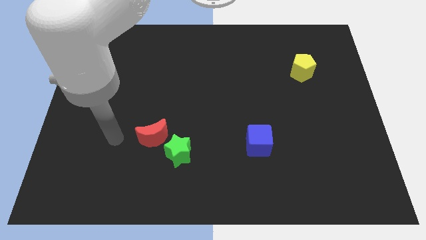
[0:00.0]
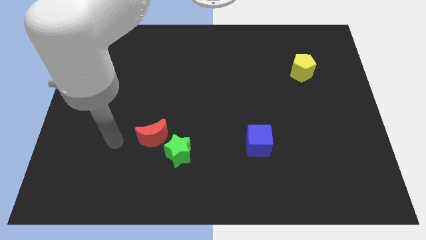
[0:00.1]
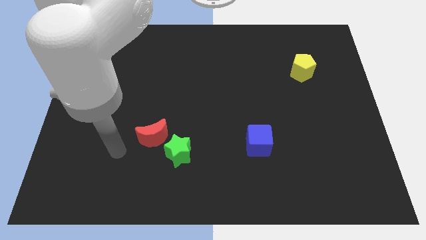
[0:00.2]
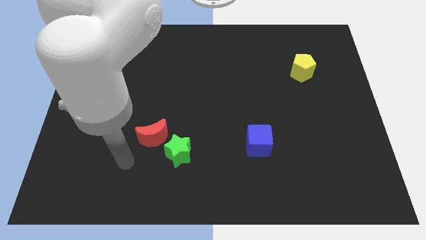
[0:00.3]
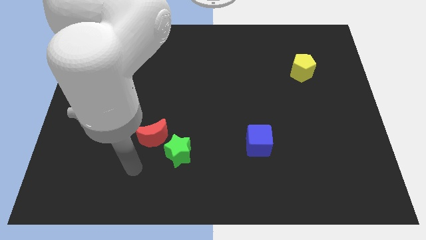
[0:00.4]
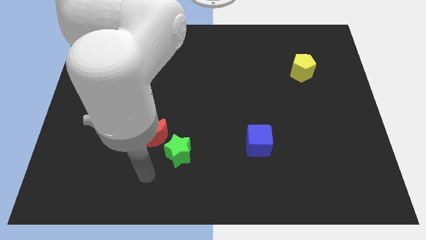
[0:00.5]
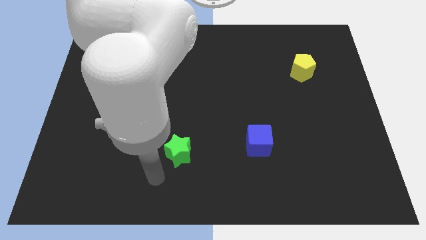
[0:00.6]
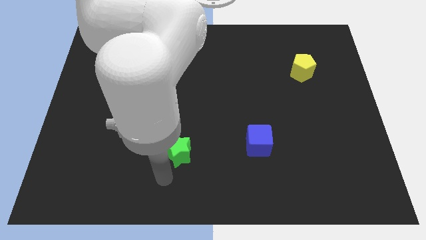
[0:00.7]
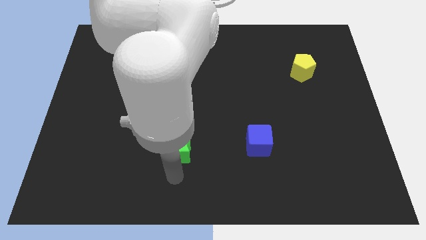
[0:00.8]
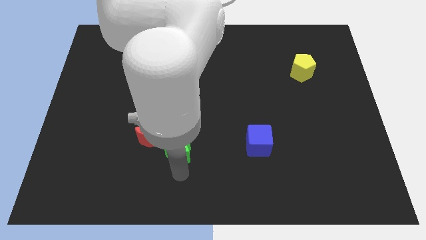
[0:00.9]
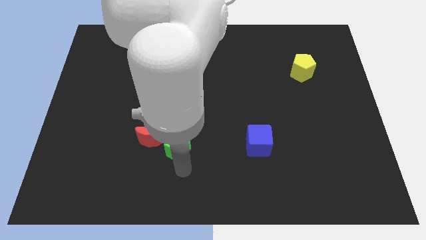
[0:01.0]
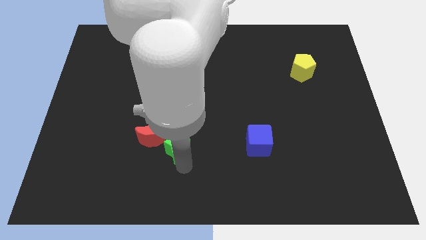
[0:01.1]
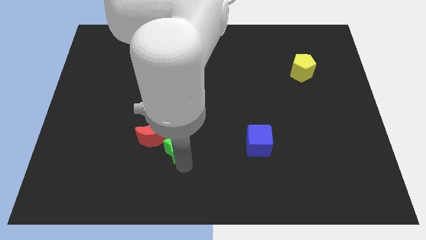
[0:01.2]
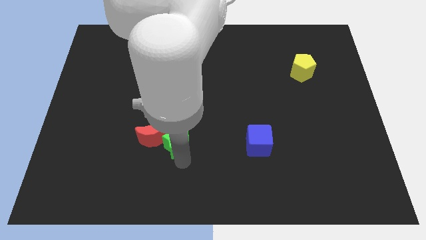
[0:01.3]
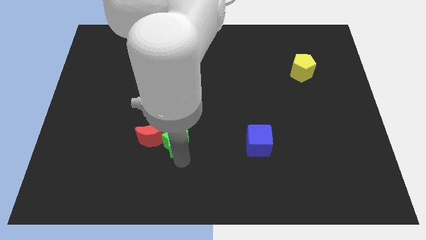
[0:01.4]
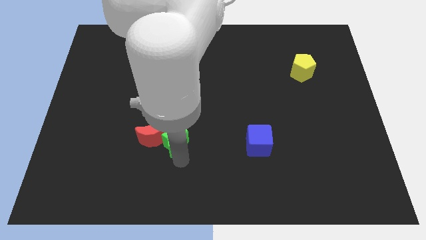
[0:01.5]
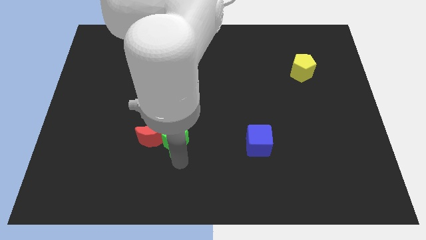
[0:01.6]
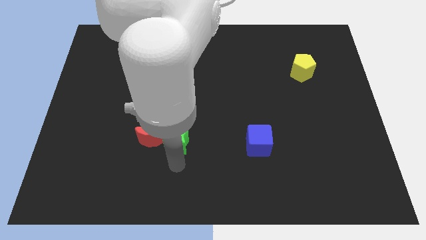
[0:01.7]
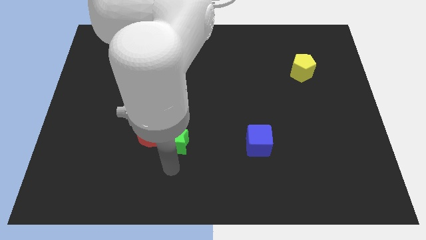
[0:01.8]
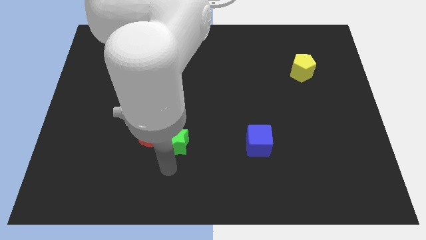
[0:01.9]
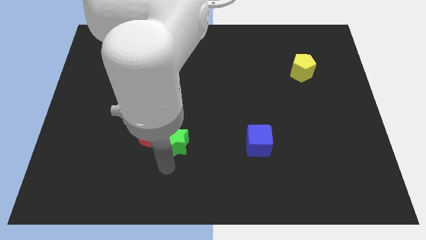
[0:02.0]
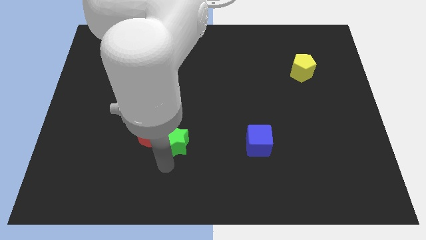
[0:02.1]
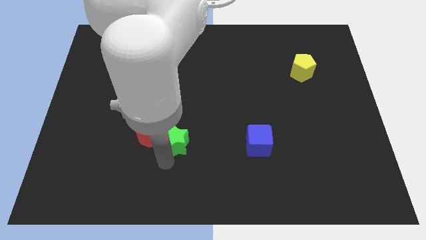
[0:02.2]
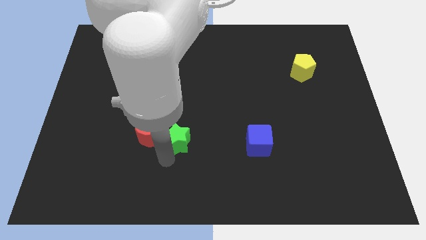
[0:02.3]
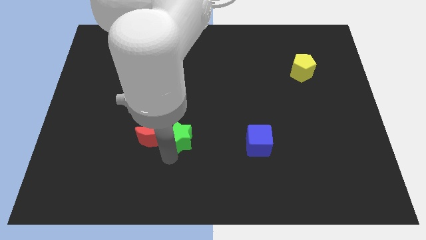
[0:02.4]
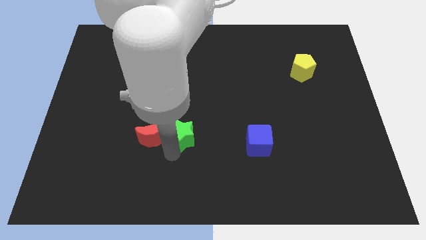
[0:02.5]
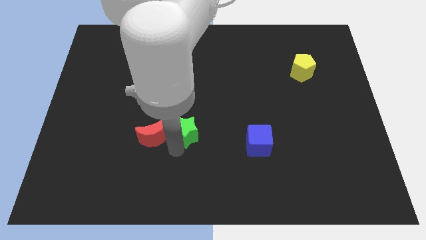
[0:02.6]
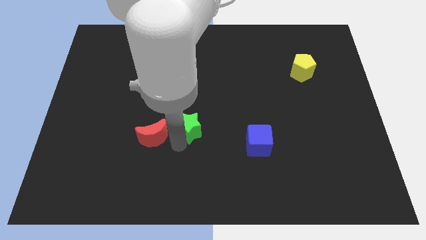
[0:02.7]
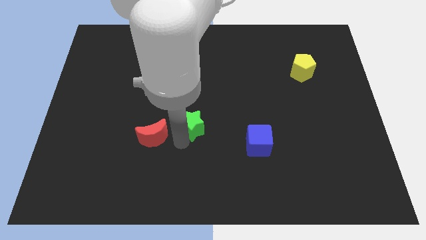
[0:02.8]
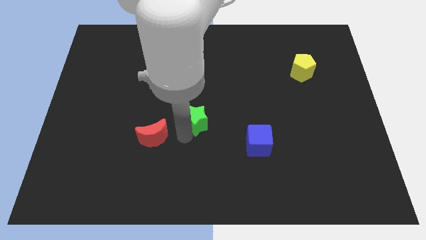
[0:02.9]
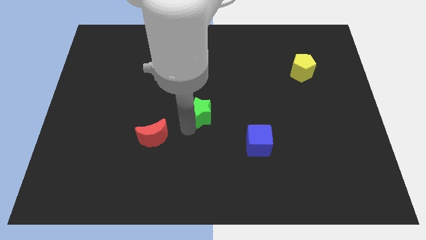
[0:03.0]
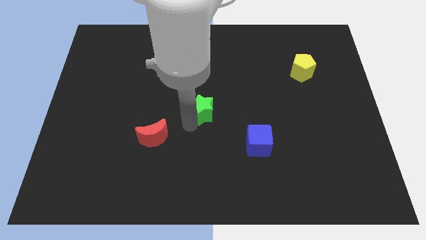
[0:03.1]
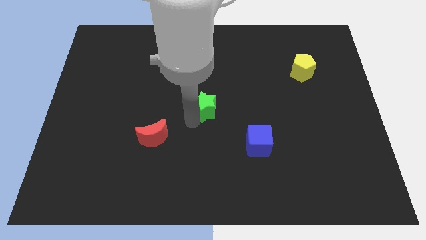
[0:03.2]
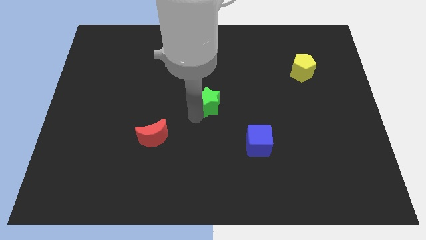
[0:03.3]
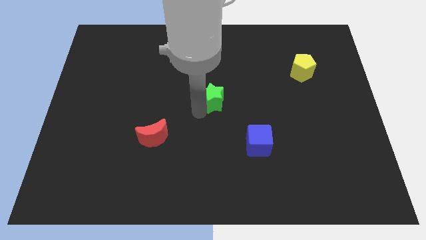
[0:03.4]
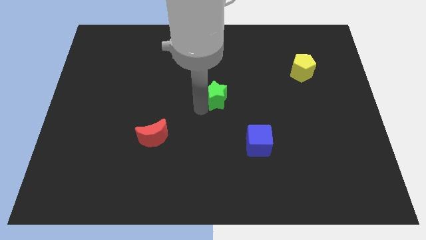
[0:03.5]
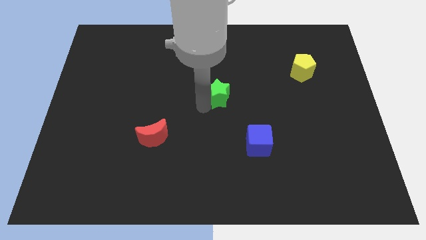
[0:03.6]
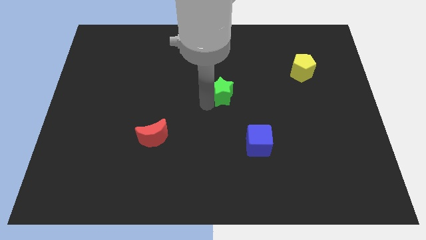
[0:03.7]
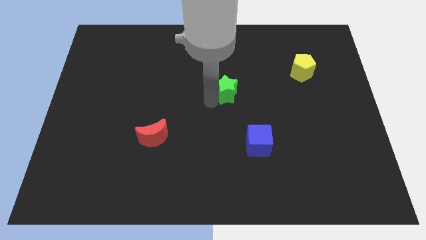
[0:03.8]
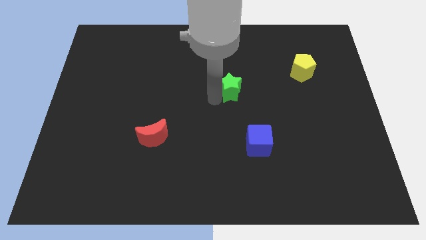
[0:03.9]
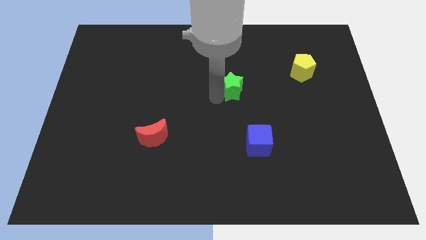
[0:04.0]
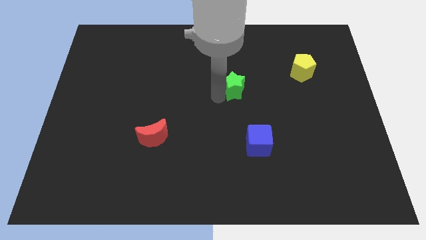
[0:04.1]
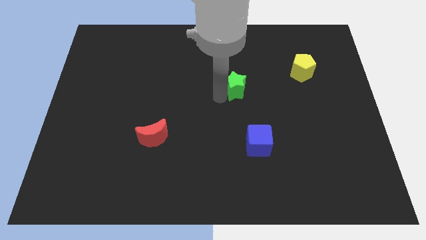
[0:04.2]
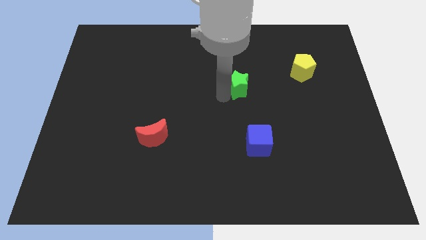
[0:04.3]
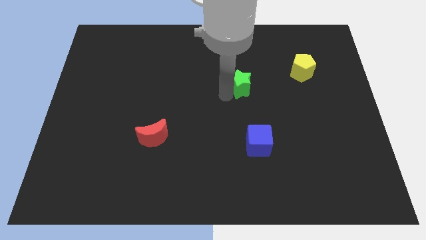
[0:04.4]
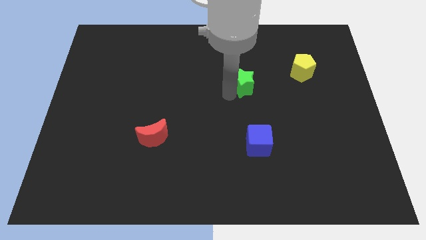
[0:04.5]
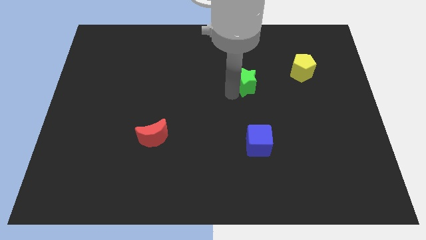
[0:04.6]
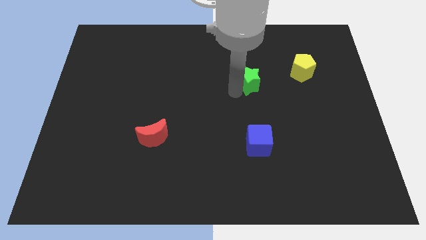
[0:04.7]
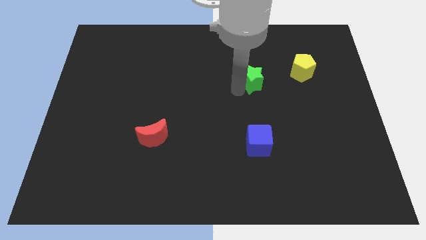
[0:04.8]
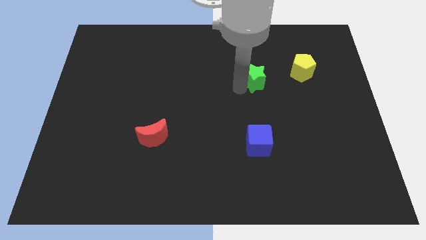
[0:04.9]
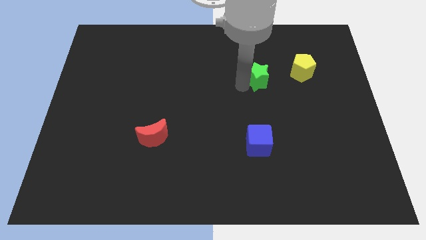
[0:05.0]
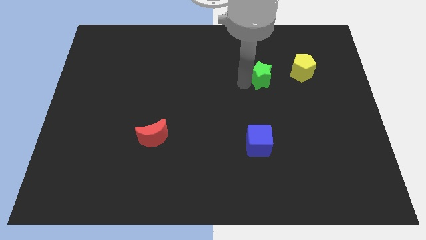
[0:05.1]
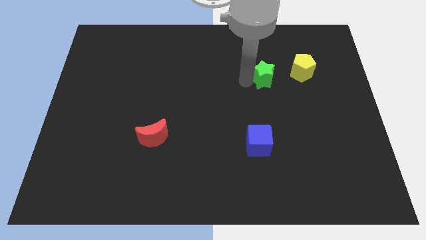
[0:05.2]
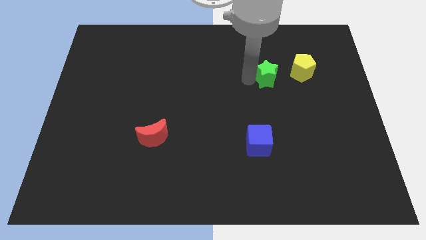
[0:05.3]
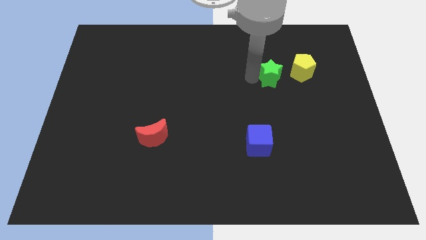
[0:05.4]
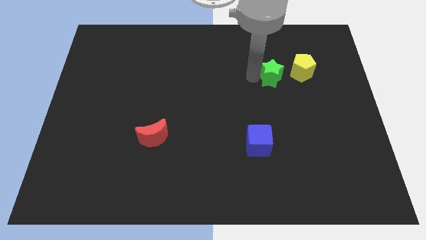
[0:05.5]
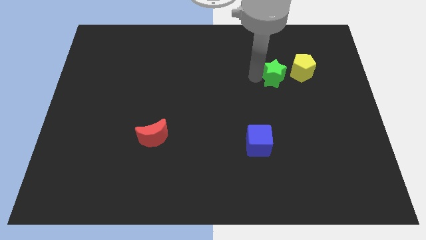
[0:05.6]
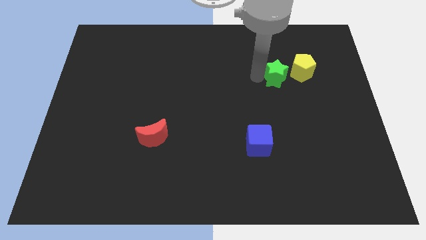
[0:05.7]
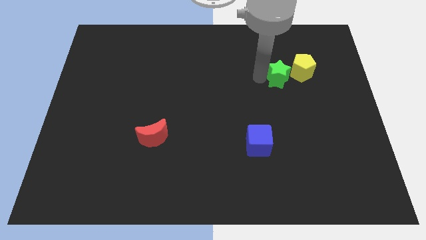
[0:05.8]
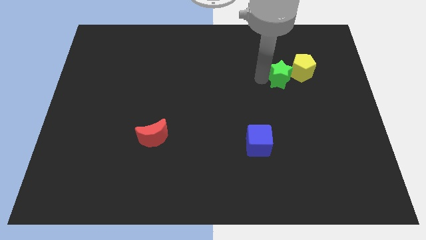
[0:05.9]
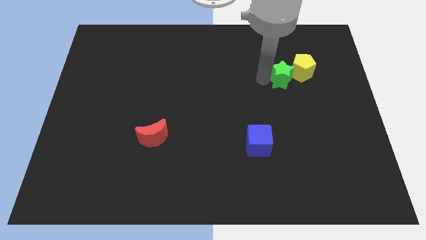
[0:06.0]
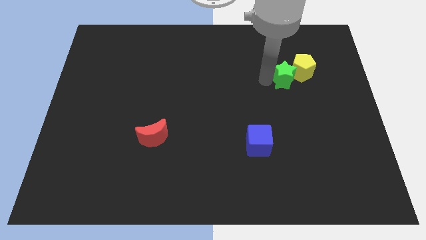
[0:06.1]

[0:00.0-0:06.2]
move the green star close to the yellow pentagon

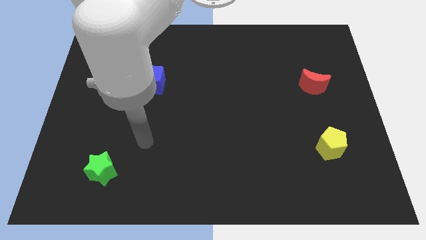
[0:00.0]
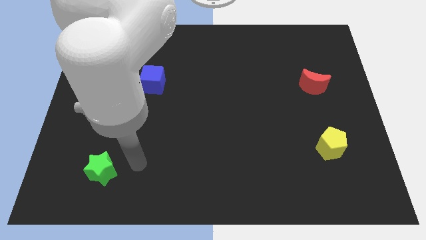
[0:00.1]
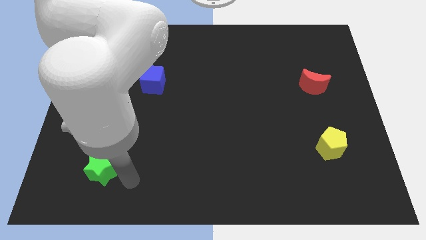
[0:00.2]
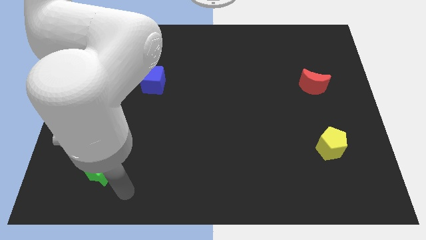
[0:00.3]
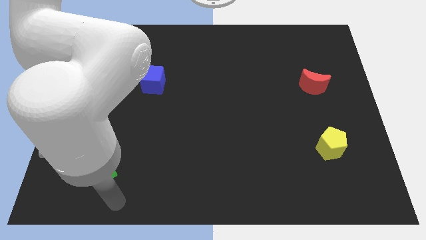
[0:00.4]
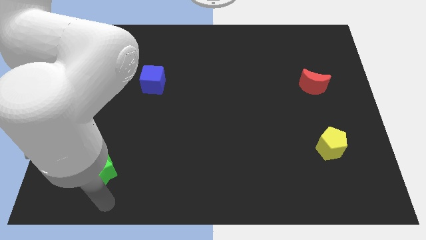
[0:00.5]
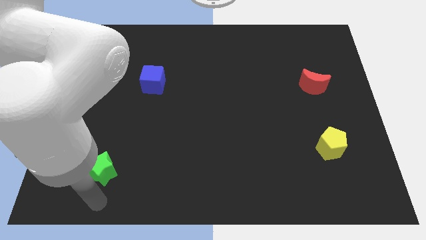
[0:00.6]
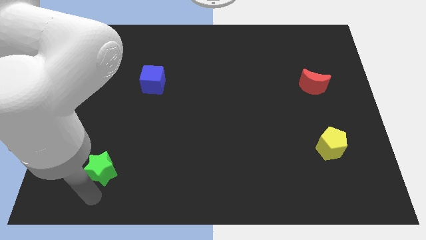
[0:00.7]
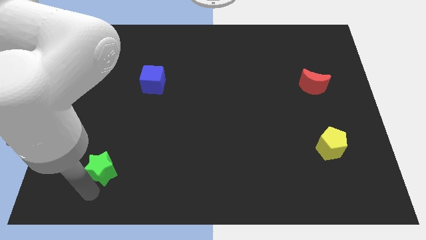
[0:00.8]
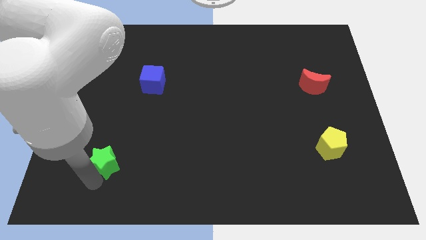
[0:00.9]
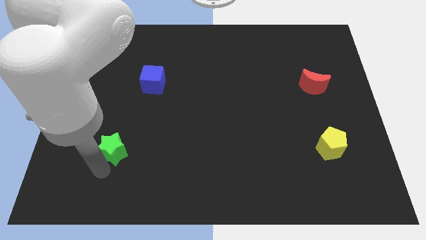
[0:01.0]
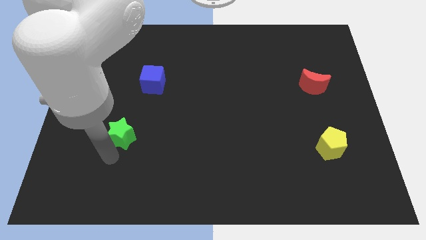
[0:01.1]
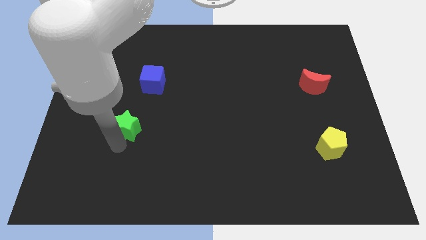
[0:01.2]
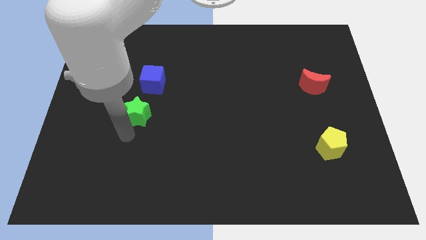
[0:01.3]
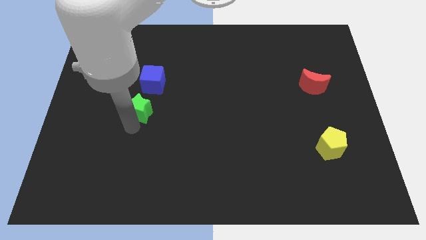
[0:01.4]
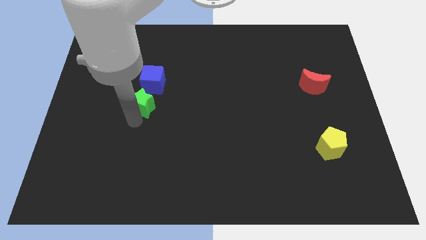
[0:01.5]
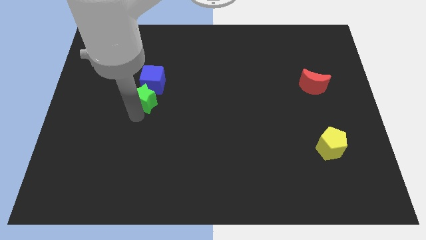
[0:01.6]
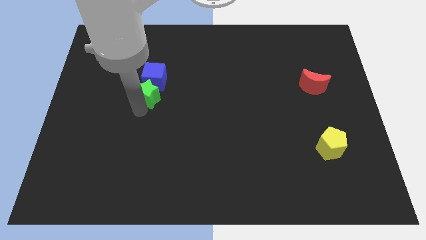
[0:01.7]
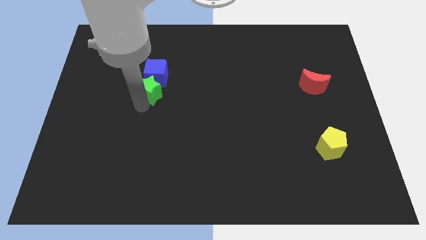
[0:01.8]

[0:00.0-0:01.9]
push the star to the blue block

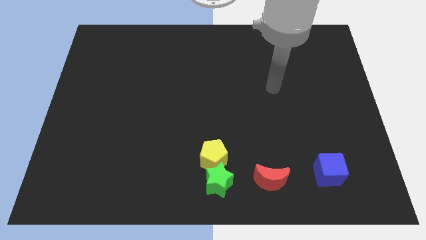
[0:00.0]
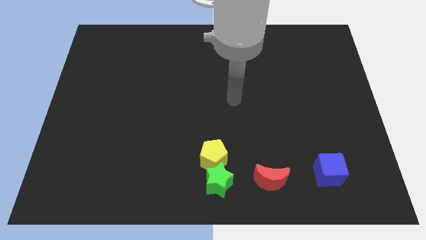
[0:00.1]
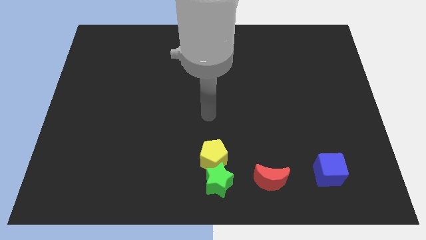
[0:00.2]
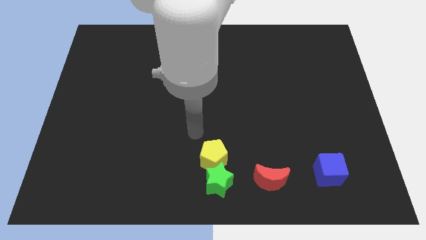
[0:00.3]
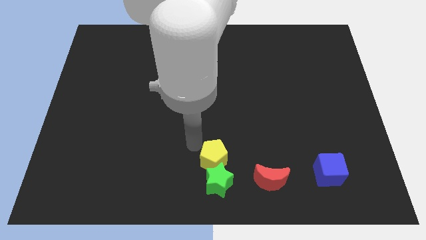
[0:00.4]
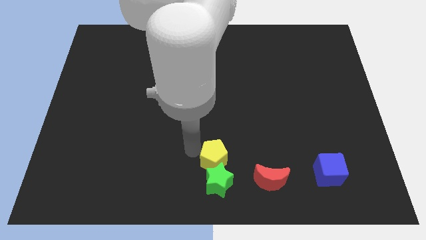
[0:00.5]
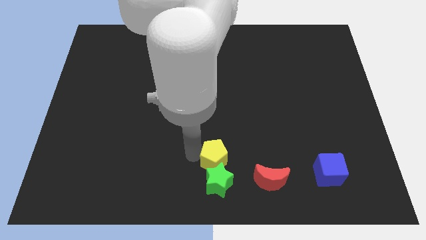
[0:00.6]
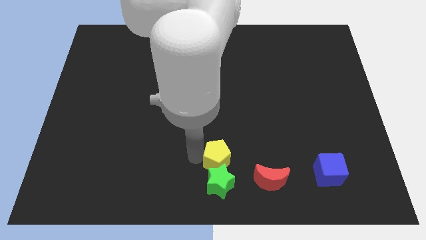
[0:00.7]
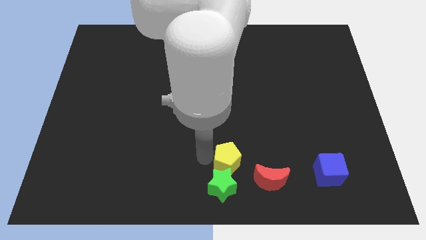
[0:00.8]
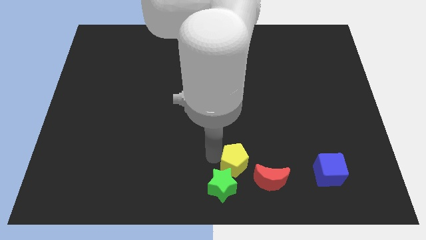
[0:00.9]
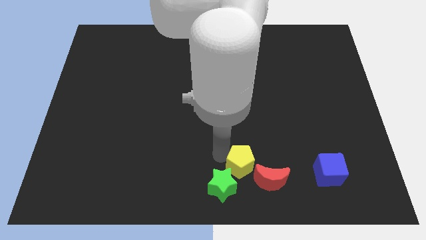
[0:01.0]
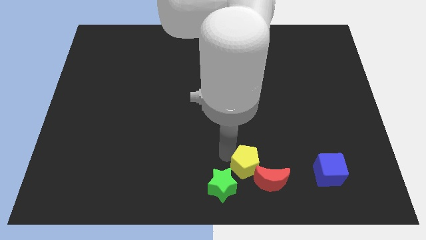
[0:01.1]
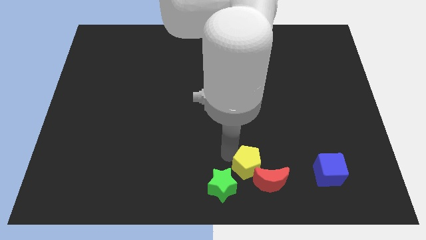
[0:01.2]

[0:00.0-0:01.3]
push the yellow block close to the moon
